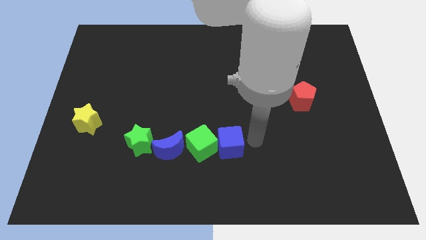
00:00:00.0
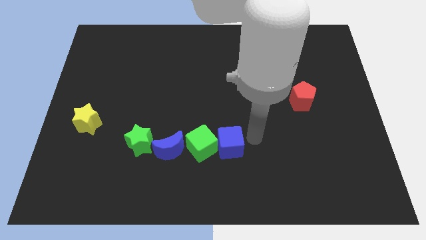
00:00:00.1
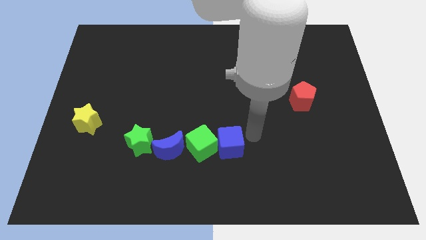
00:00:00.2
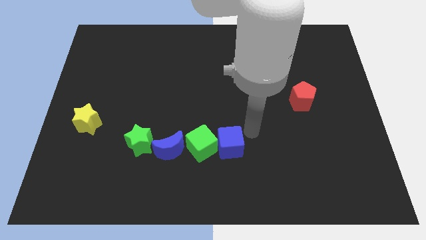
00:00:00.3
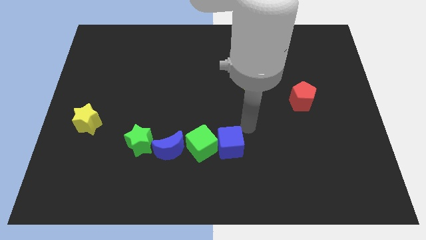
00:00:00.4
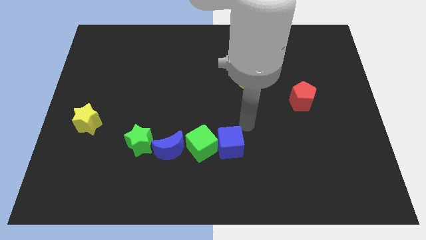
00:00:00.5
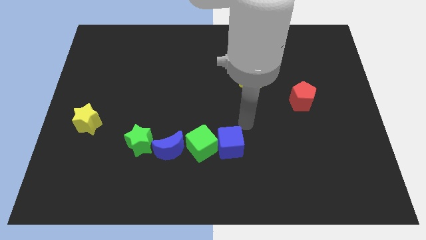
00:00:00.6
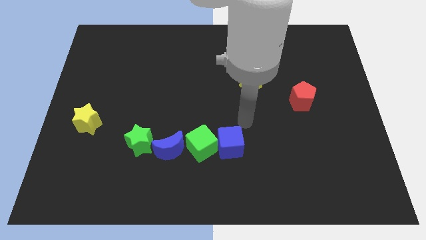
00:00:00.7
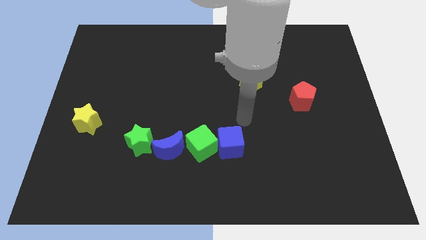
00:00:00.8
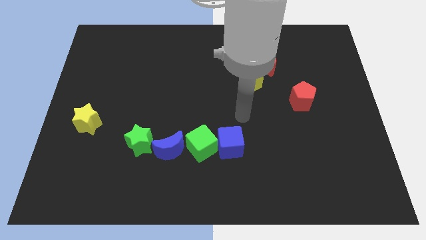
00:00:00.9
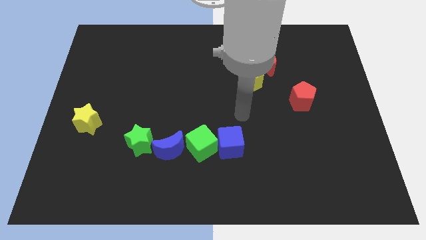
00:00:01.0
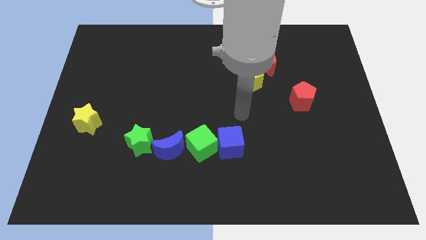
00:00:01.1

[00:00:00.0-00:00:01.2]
place your arm between yellow pentagon and blue cube

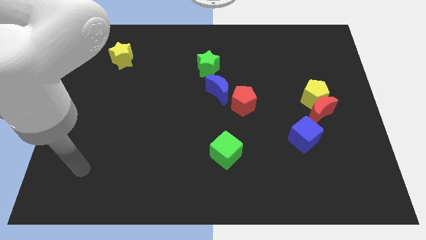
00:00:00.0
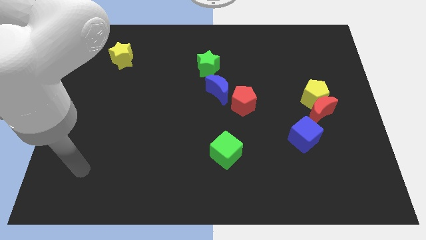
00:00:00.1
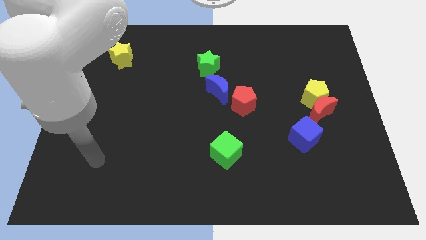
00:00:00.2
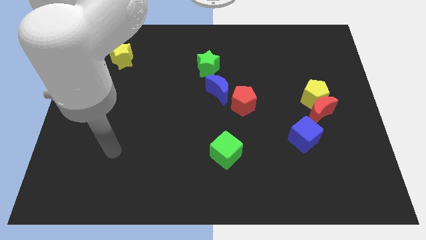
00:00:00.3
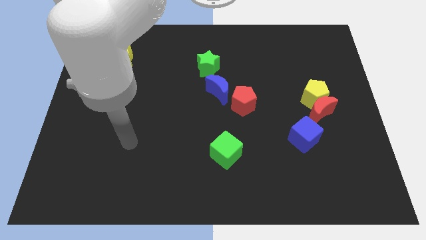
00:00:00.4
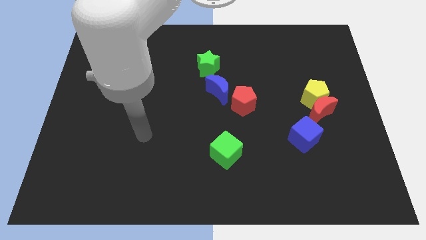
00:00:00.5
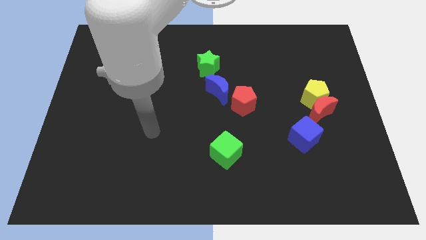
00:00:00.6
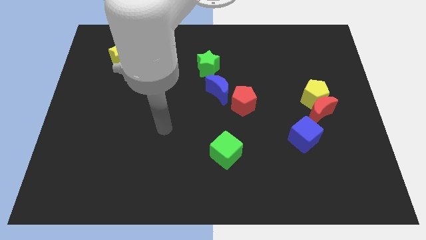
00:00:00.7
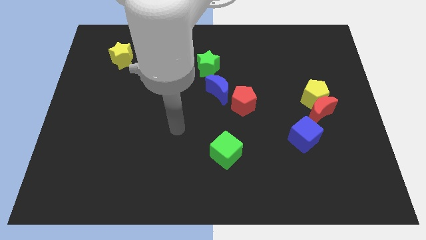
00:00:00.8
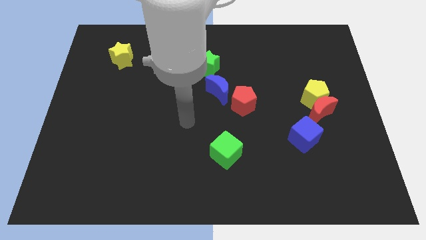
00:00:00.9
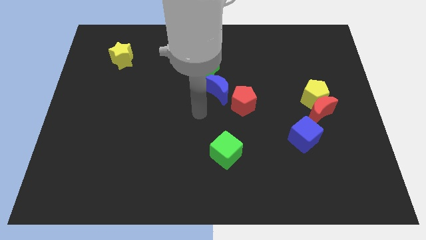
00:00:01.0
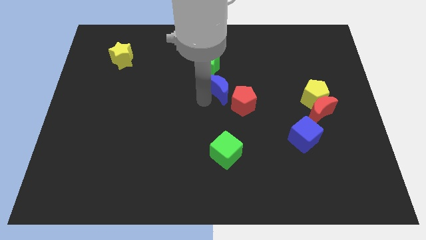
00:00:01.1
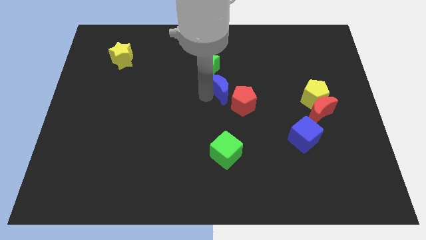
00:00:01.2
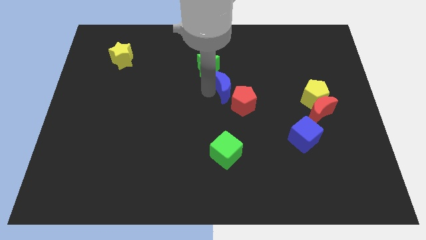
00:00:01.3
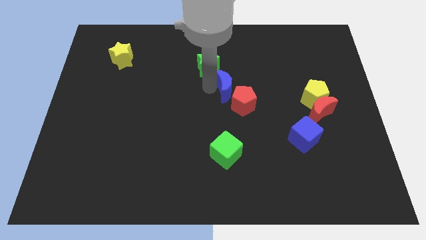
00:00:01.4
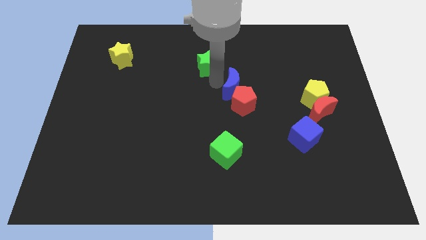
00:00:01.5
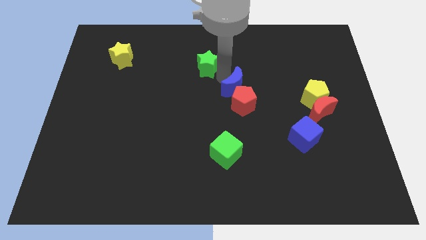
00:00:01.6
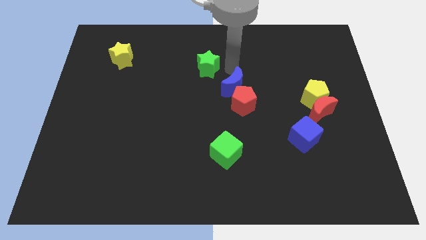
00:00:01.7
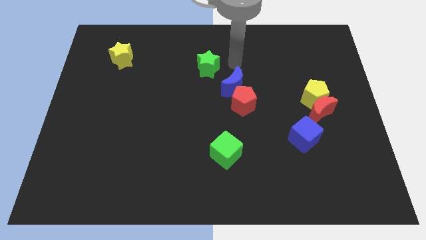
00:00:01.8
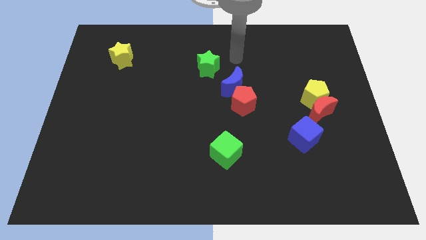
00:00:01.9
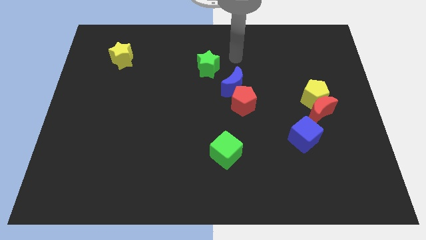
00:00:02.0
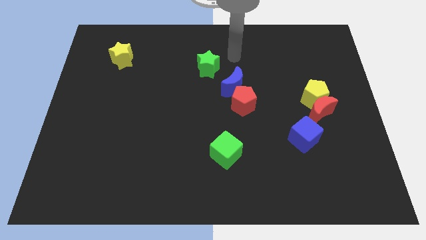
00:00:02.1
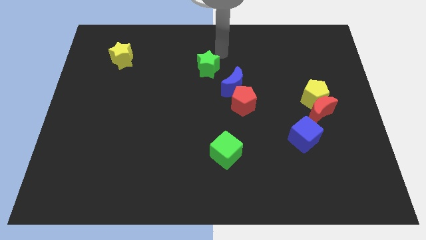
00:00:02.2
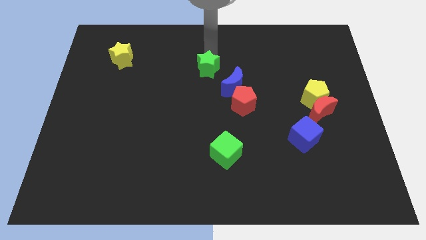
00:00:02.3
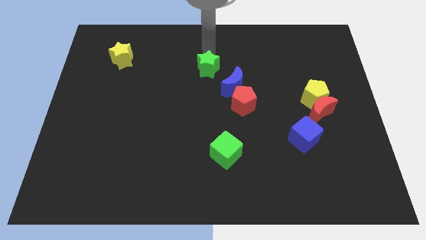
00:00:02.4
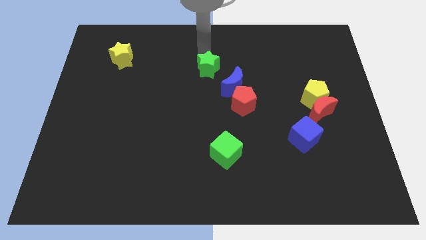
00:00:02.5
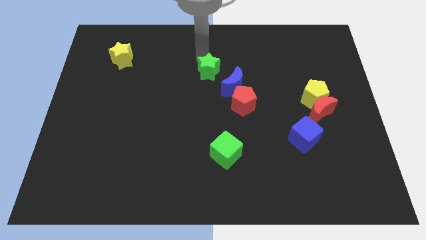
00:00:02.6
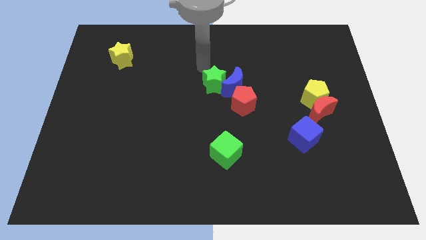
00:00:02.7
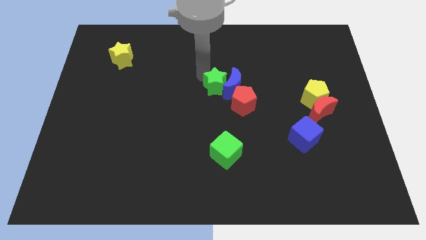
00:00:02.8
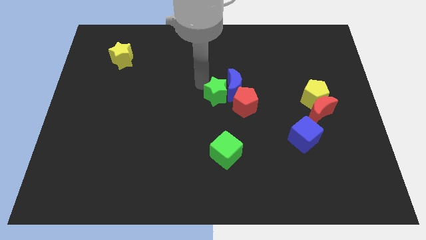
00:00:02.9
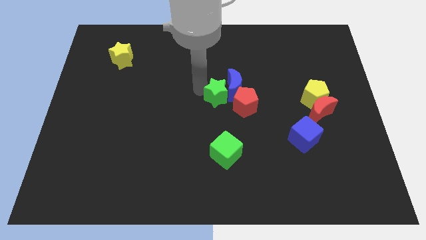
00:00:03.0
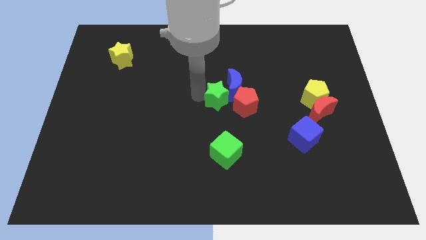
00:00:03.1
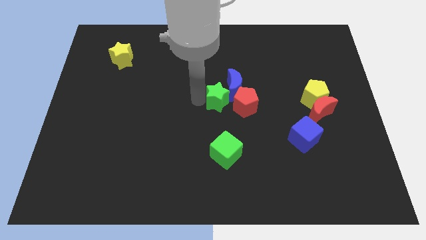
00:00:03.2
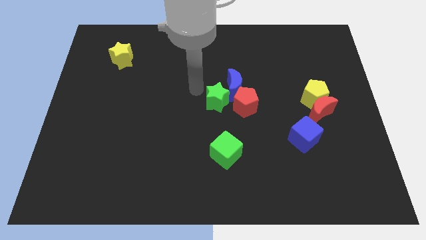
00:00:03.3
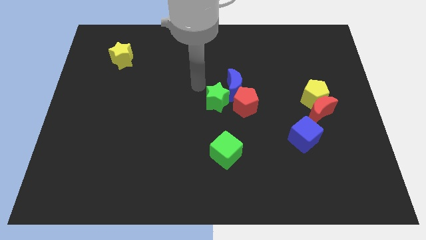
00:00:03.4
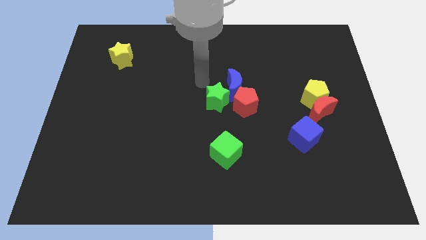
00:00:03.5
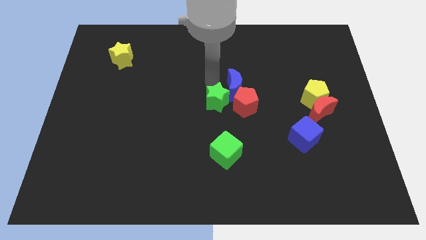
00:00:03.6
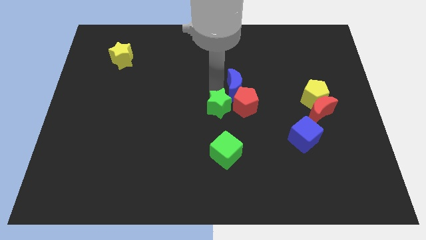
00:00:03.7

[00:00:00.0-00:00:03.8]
place the green star above the green cube

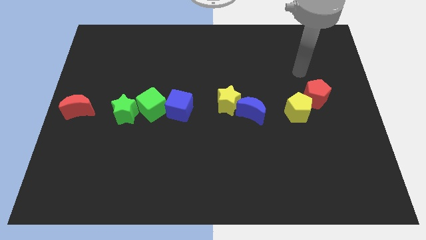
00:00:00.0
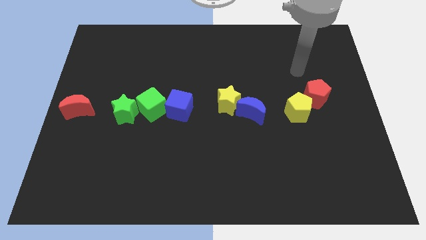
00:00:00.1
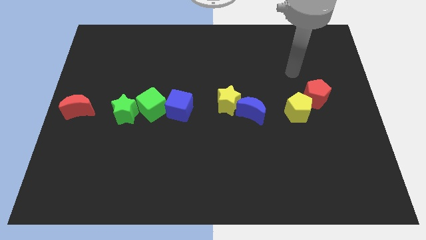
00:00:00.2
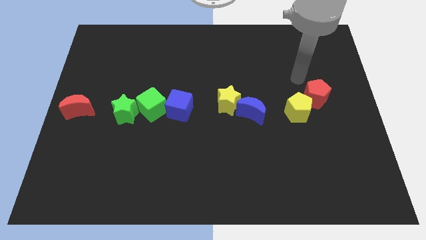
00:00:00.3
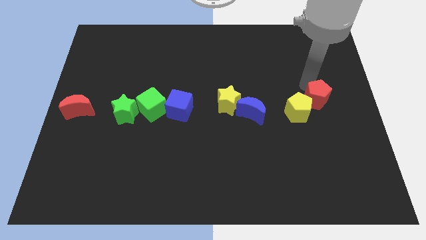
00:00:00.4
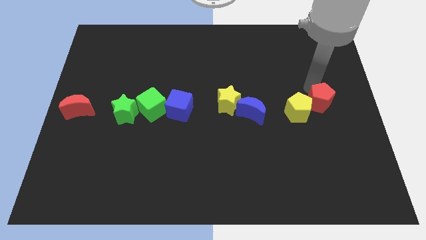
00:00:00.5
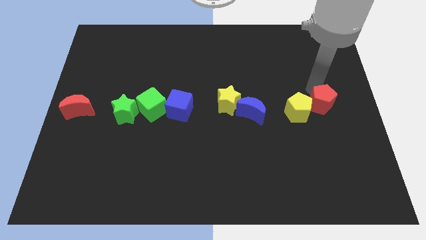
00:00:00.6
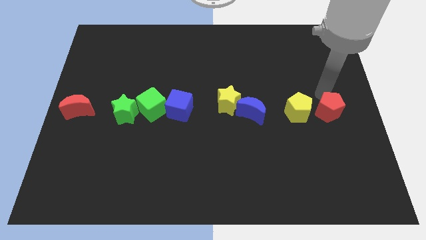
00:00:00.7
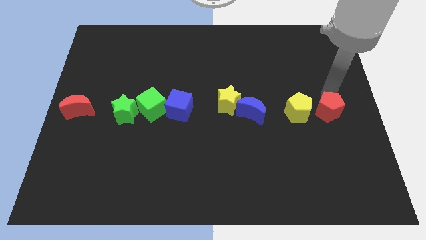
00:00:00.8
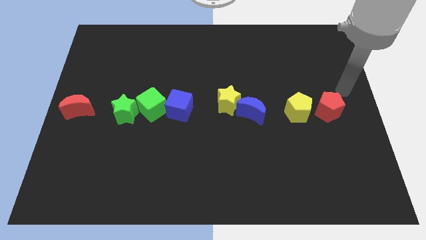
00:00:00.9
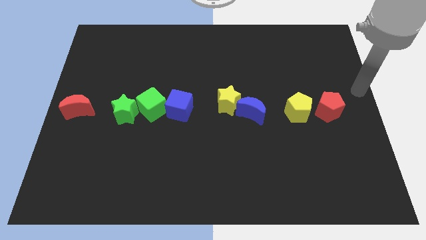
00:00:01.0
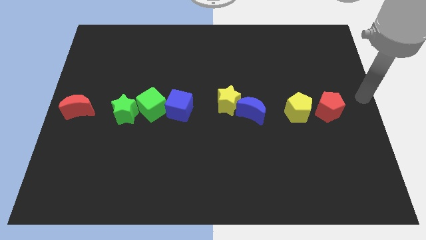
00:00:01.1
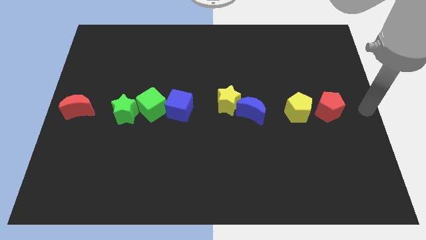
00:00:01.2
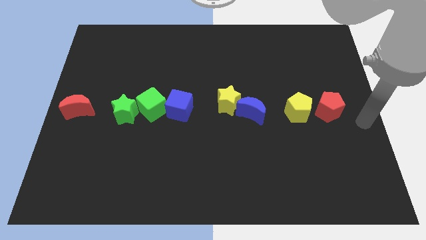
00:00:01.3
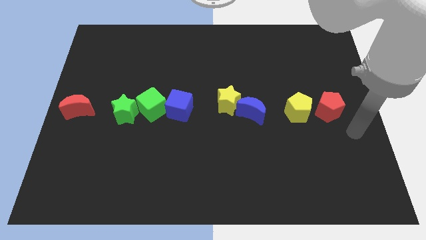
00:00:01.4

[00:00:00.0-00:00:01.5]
place the red pentagon to the right of yellow pentagon

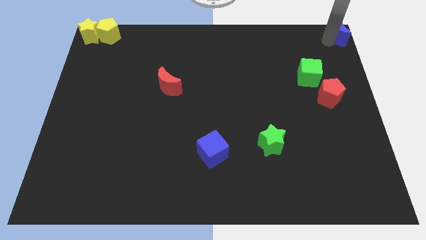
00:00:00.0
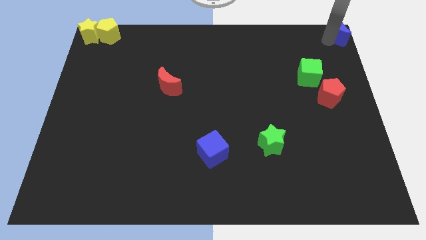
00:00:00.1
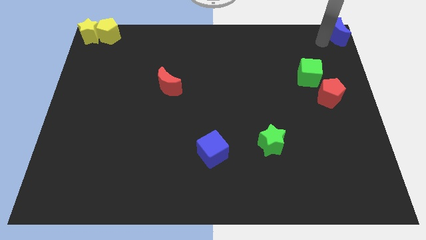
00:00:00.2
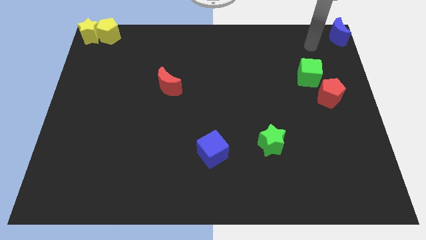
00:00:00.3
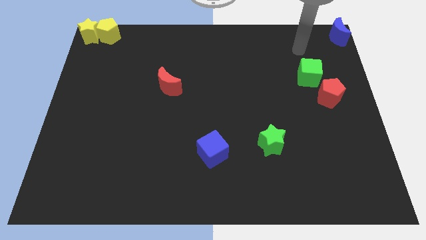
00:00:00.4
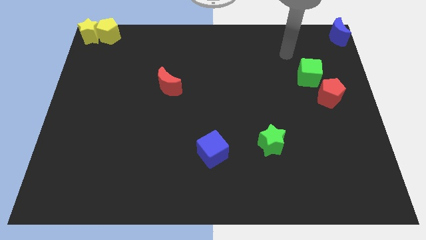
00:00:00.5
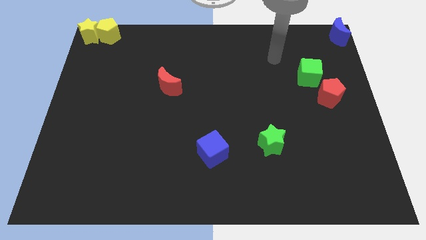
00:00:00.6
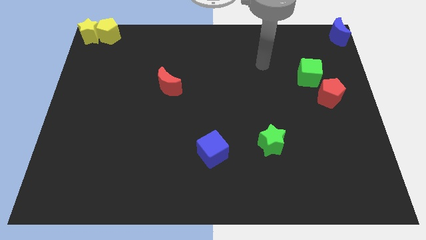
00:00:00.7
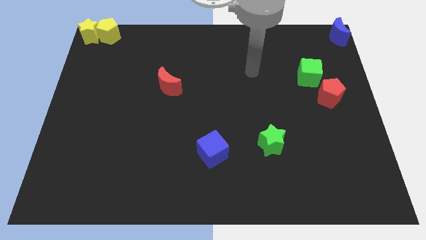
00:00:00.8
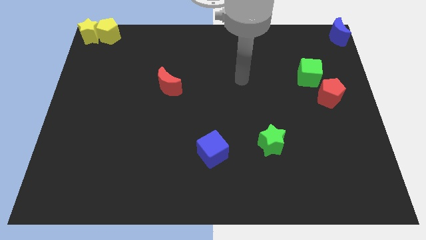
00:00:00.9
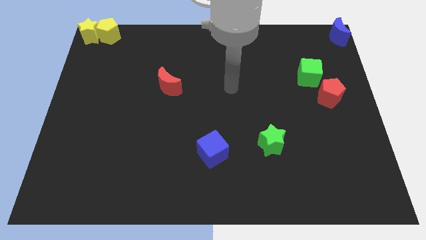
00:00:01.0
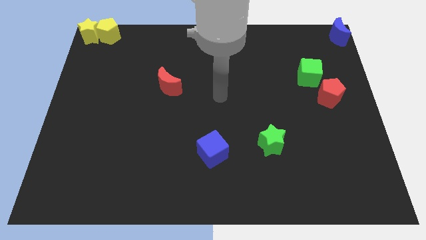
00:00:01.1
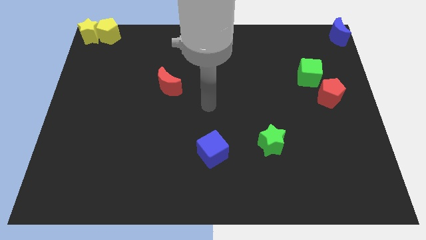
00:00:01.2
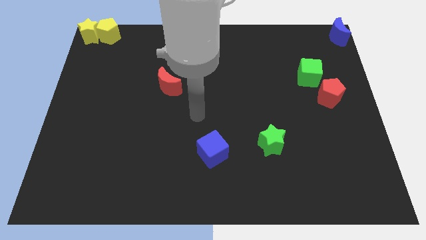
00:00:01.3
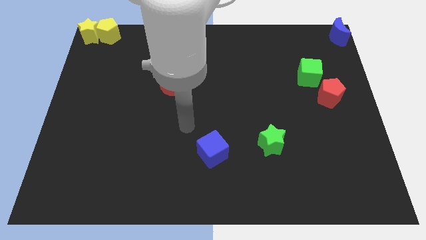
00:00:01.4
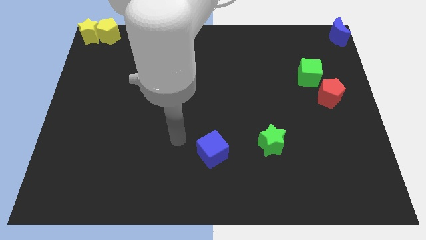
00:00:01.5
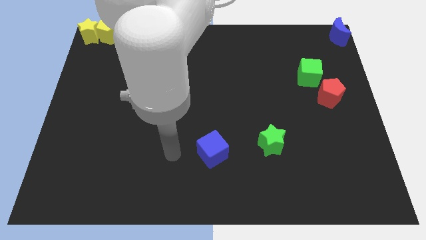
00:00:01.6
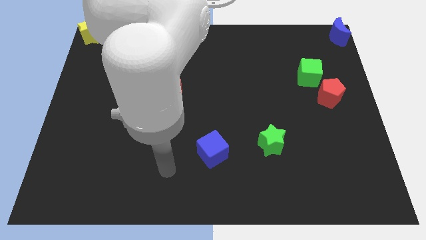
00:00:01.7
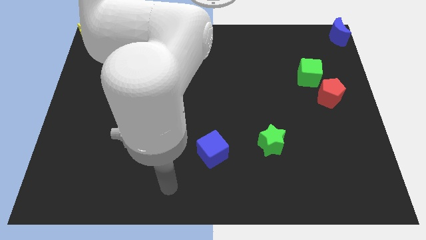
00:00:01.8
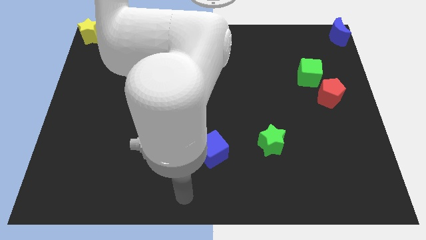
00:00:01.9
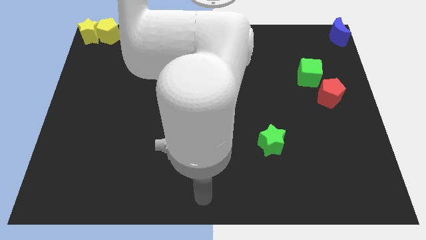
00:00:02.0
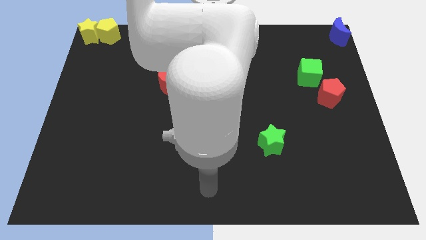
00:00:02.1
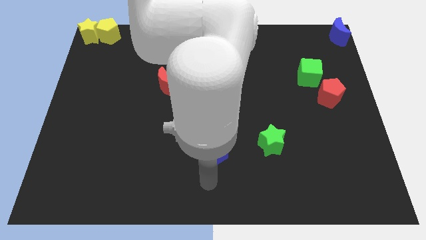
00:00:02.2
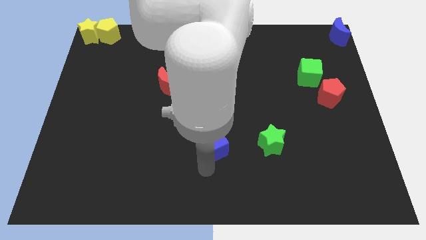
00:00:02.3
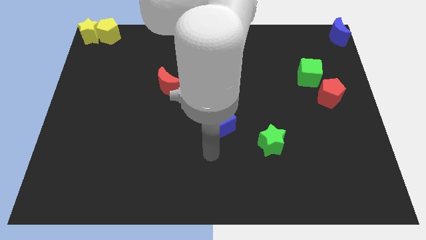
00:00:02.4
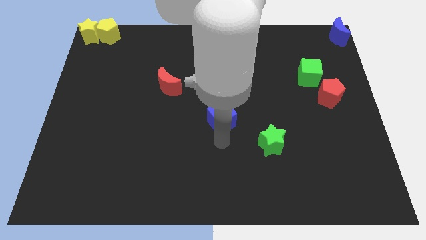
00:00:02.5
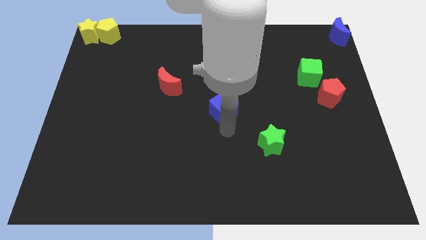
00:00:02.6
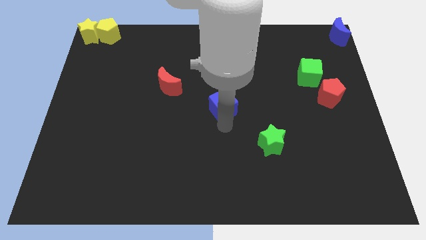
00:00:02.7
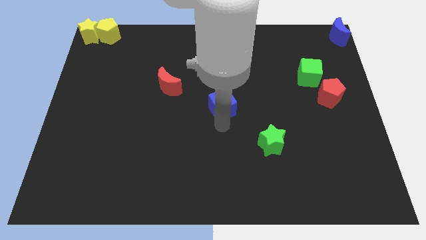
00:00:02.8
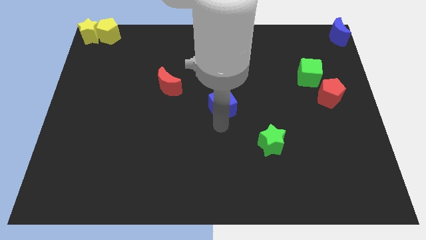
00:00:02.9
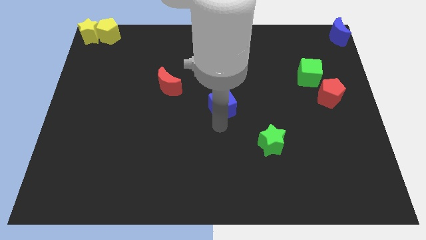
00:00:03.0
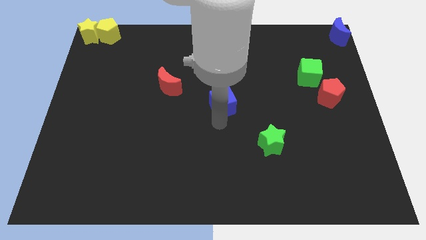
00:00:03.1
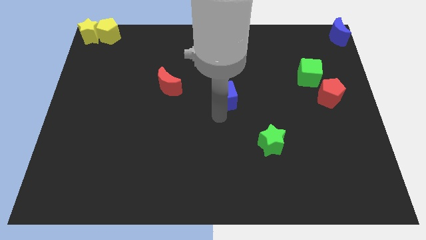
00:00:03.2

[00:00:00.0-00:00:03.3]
move the blue cube to the center of the board
